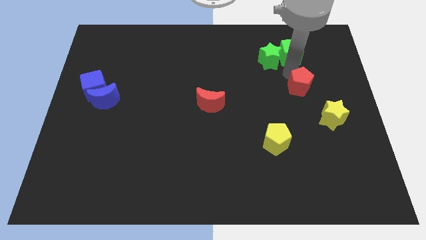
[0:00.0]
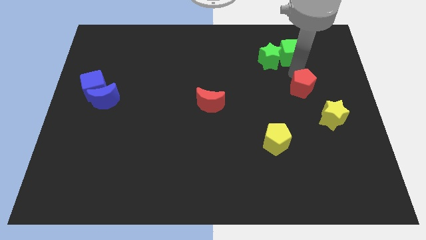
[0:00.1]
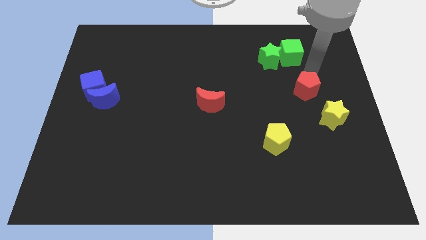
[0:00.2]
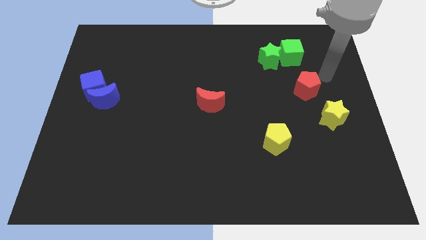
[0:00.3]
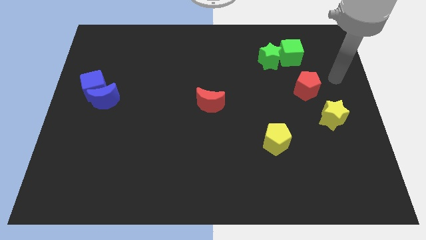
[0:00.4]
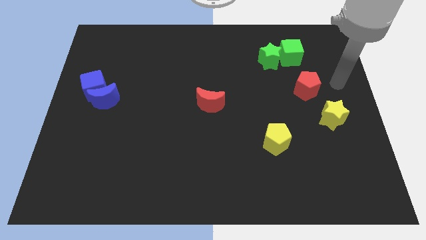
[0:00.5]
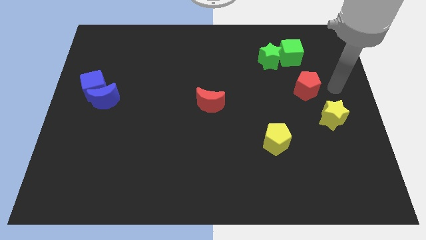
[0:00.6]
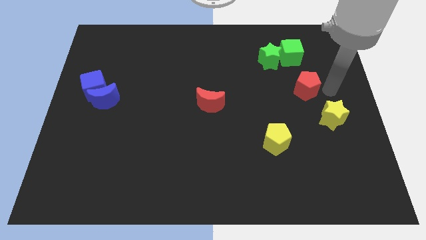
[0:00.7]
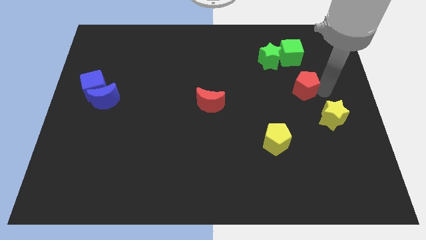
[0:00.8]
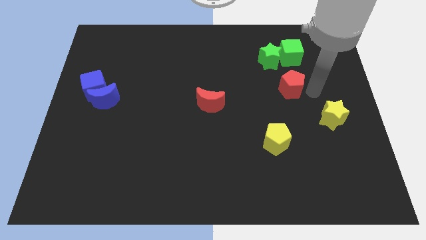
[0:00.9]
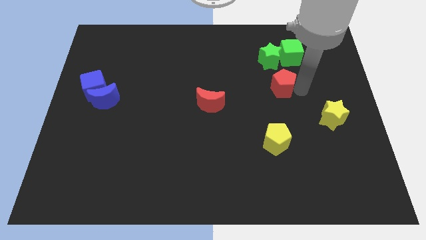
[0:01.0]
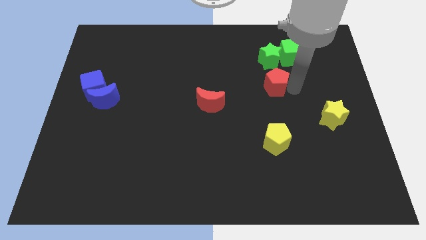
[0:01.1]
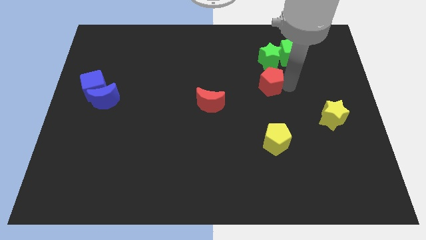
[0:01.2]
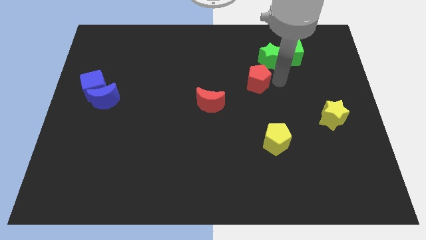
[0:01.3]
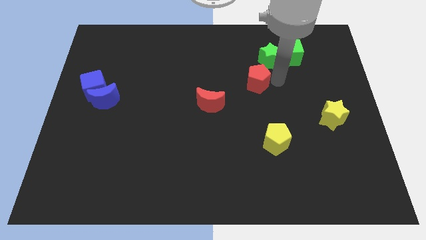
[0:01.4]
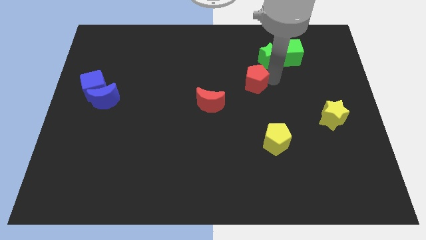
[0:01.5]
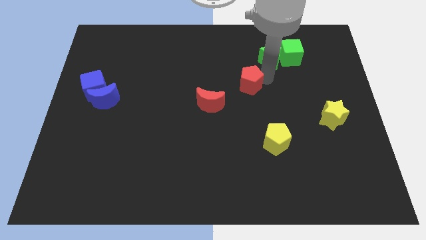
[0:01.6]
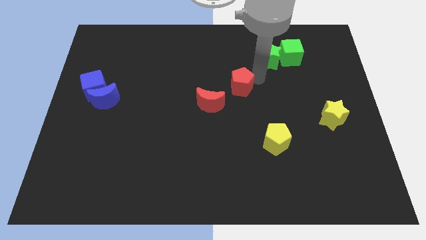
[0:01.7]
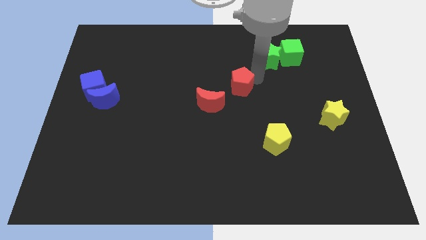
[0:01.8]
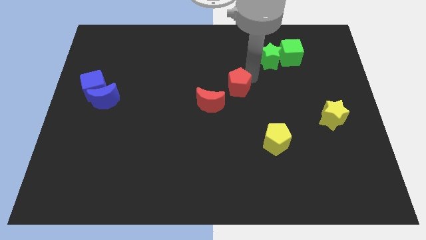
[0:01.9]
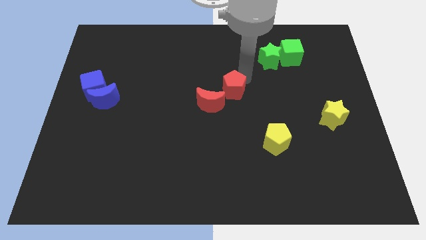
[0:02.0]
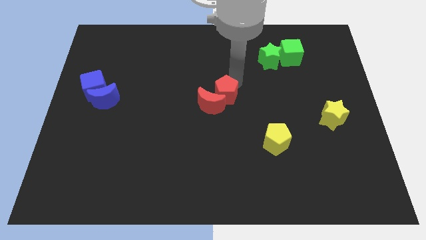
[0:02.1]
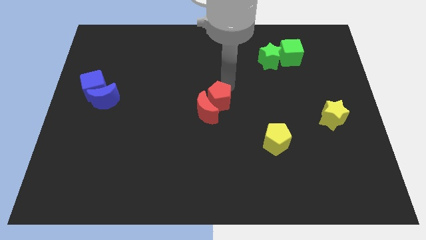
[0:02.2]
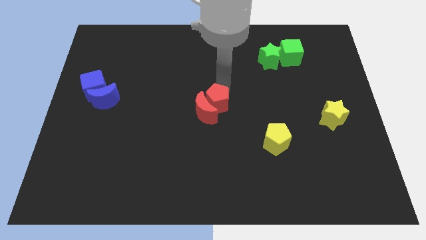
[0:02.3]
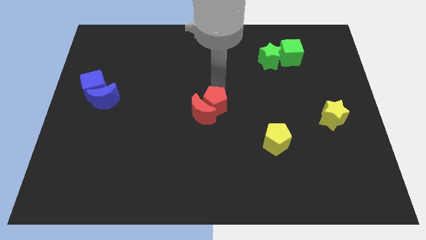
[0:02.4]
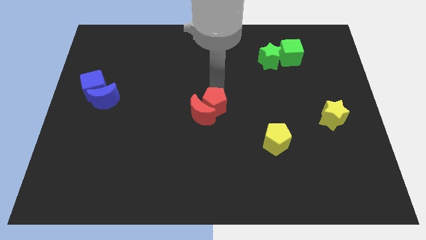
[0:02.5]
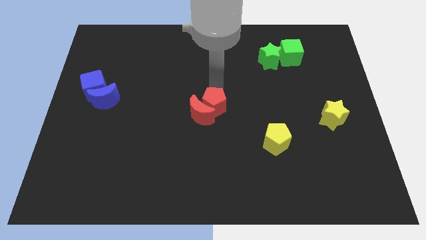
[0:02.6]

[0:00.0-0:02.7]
push the red pentagon into the red moon

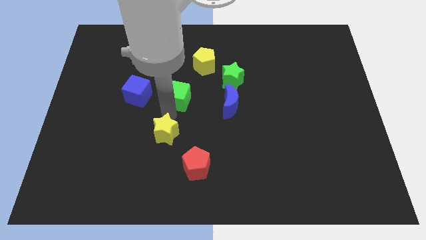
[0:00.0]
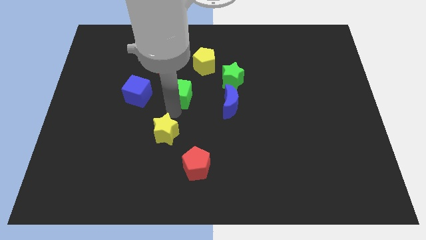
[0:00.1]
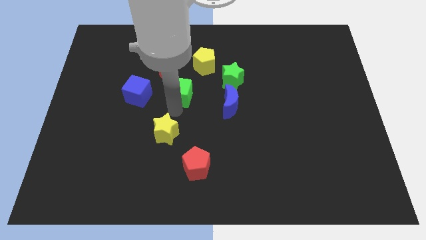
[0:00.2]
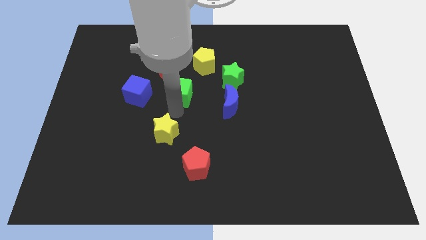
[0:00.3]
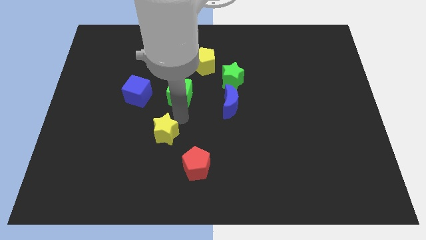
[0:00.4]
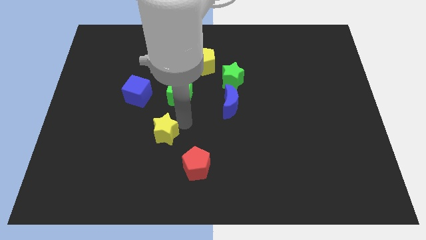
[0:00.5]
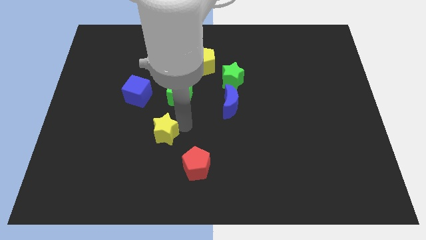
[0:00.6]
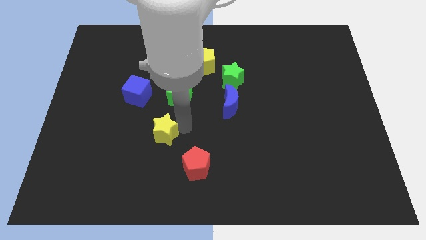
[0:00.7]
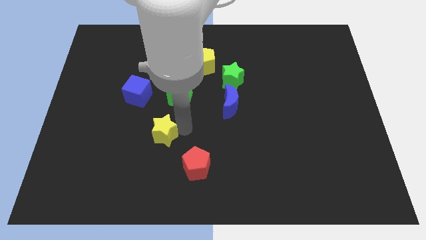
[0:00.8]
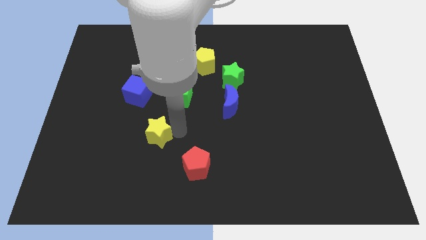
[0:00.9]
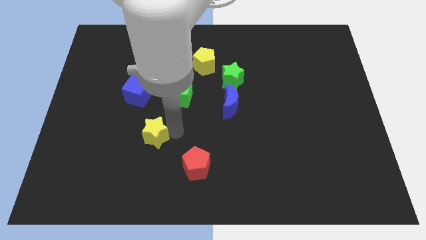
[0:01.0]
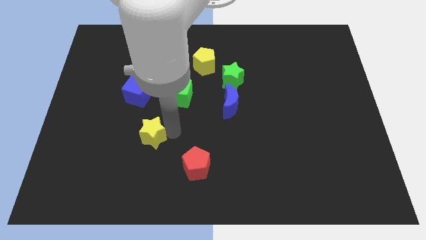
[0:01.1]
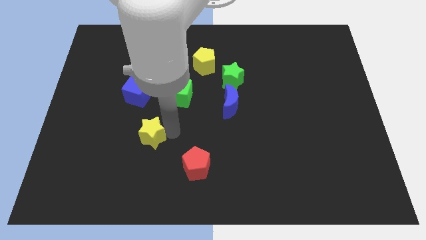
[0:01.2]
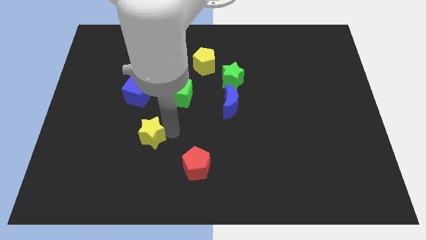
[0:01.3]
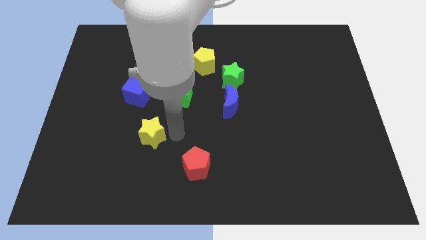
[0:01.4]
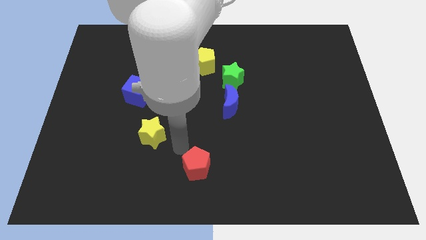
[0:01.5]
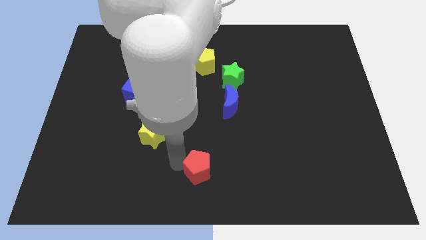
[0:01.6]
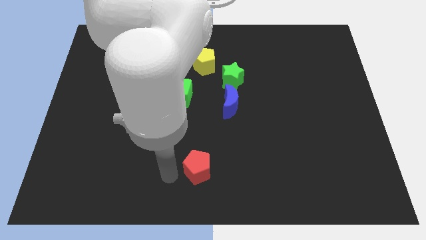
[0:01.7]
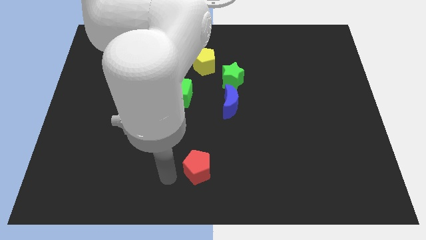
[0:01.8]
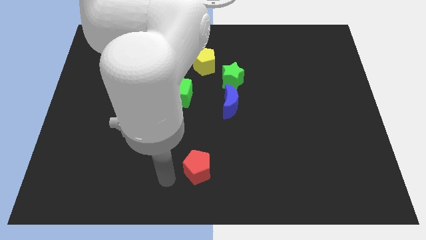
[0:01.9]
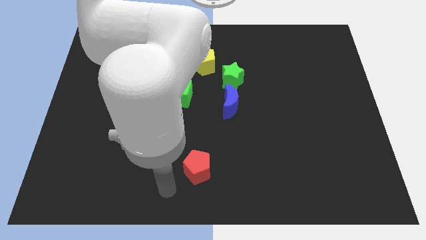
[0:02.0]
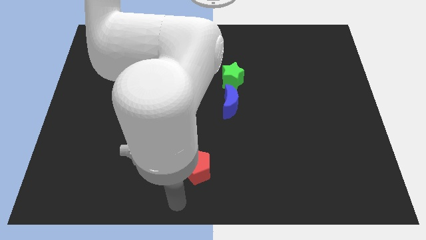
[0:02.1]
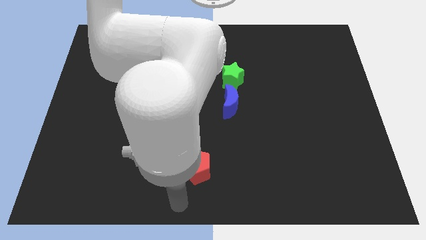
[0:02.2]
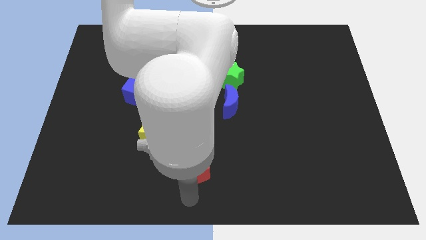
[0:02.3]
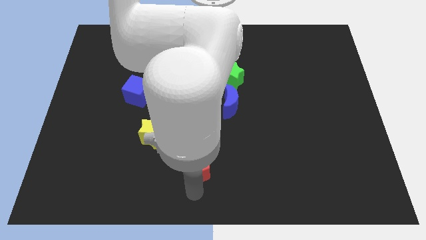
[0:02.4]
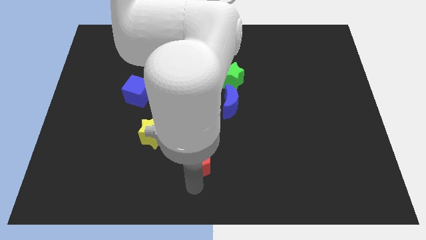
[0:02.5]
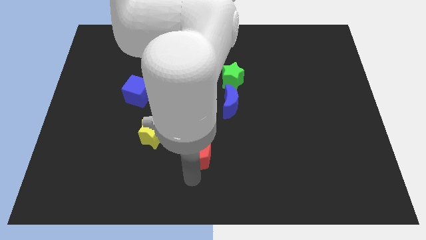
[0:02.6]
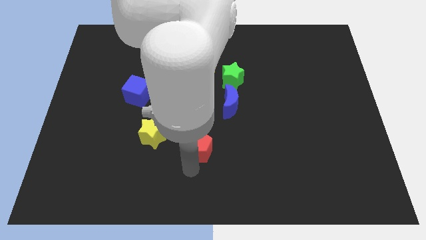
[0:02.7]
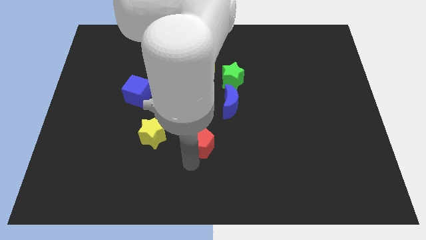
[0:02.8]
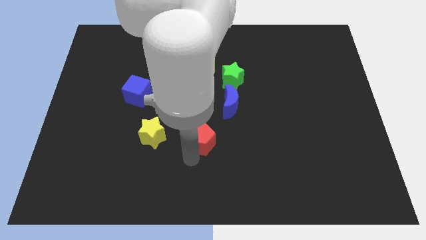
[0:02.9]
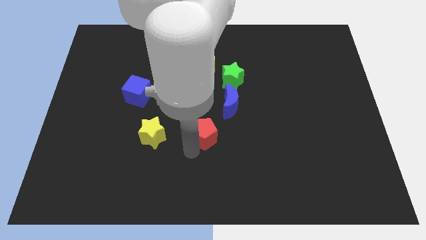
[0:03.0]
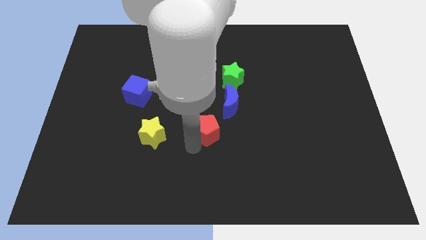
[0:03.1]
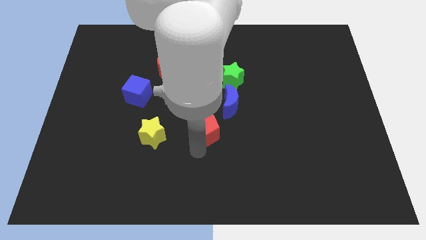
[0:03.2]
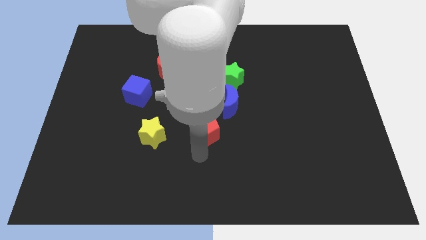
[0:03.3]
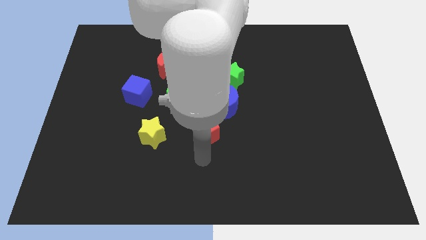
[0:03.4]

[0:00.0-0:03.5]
move the red penagon to right of yellow star

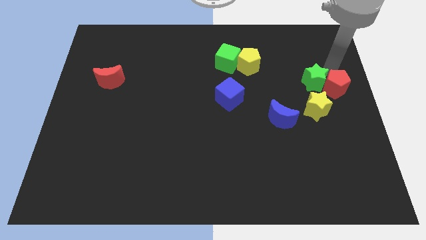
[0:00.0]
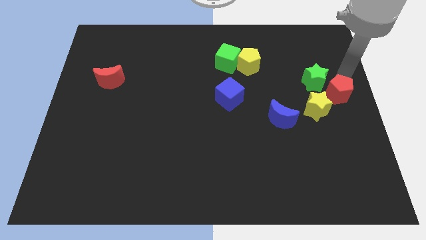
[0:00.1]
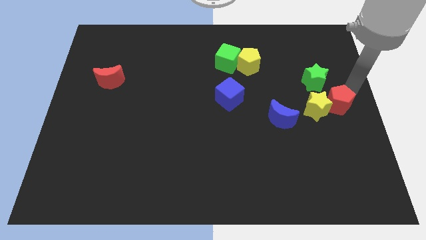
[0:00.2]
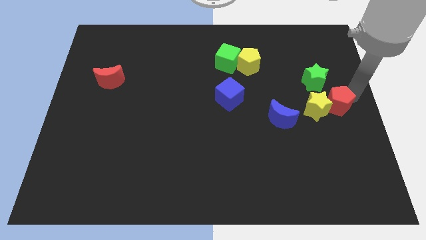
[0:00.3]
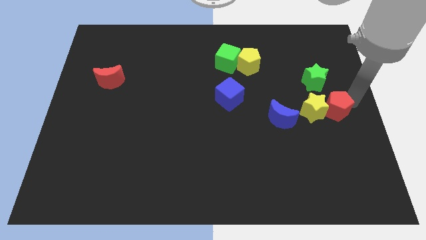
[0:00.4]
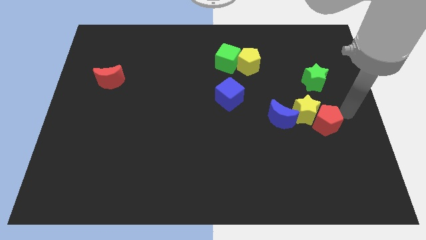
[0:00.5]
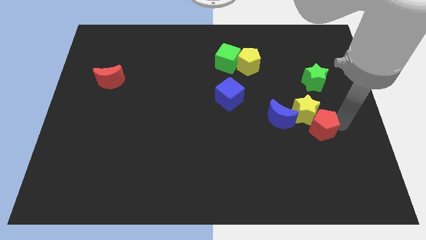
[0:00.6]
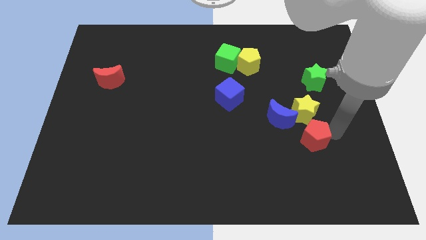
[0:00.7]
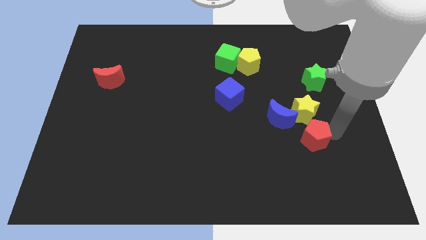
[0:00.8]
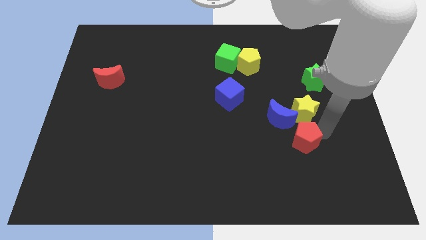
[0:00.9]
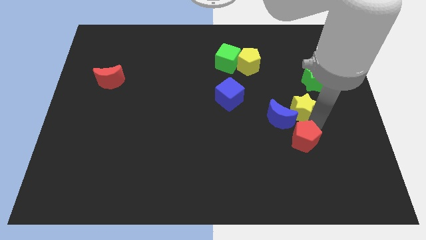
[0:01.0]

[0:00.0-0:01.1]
put the red pentagon below the yellow star

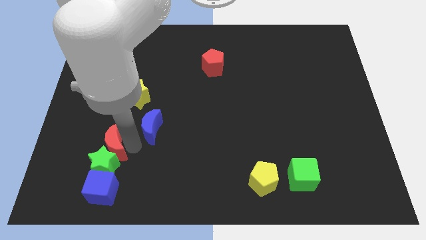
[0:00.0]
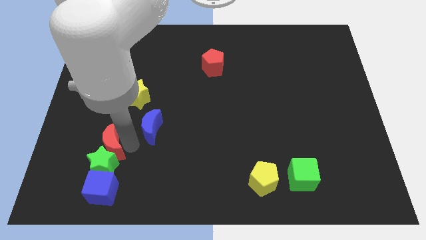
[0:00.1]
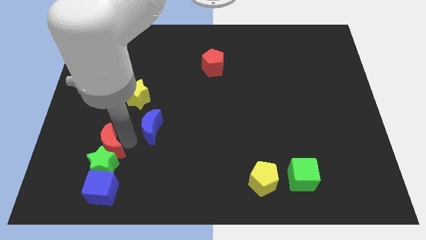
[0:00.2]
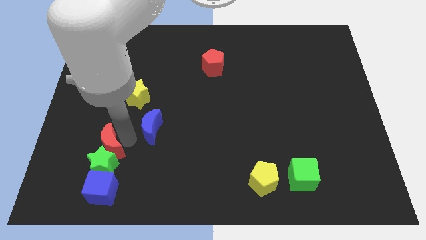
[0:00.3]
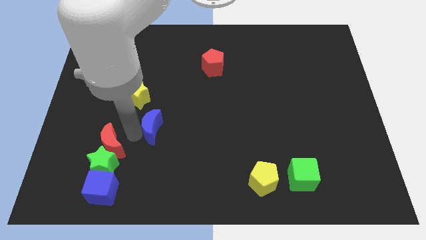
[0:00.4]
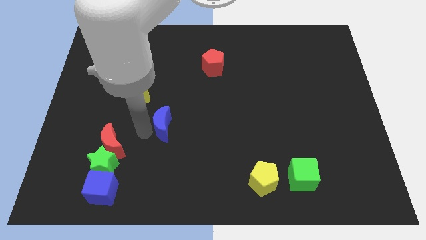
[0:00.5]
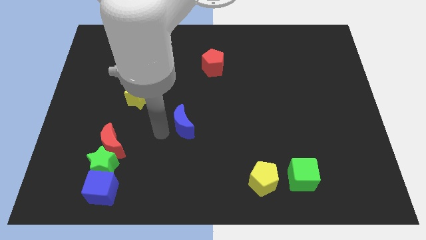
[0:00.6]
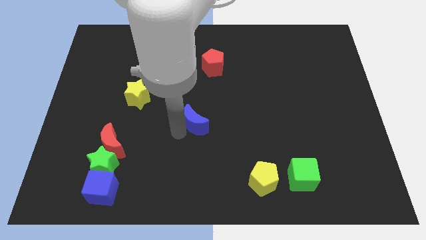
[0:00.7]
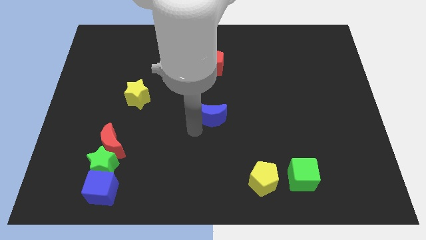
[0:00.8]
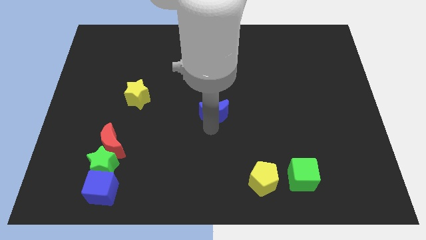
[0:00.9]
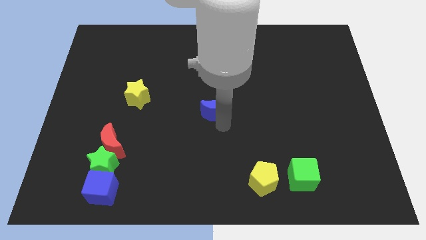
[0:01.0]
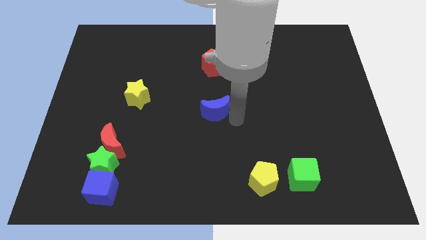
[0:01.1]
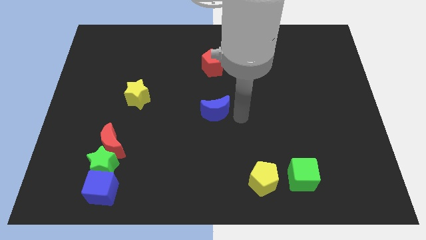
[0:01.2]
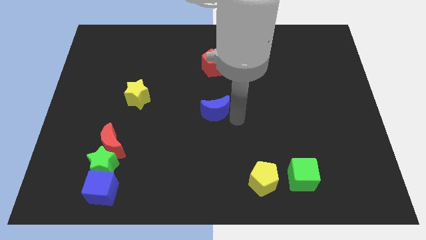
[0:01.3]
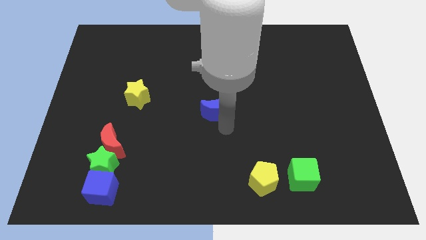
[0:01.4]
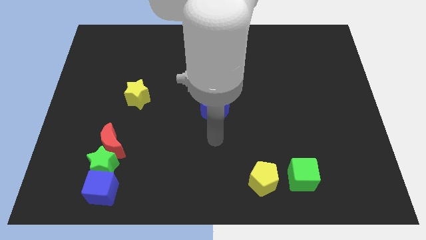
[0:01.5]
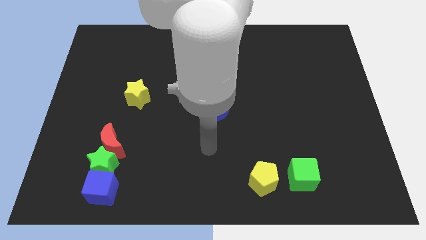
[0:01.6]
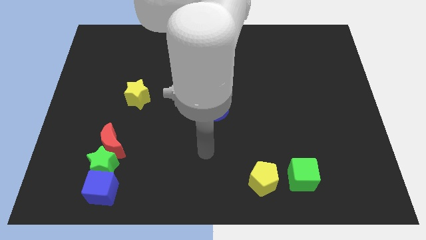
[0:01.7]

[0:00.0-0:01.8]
place the blue moon towards the center of the board
